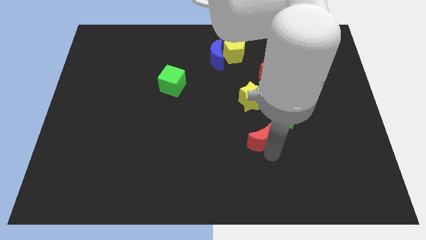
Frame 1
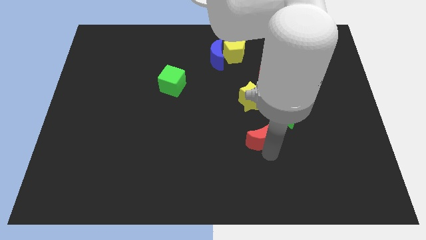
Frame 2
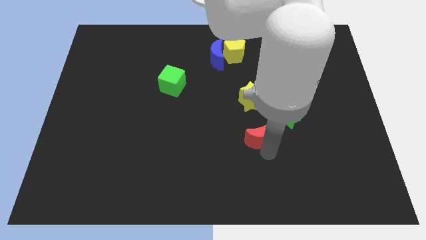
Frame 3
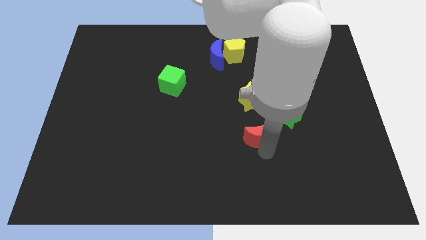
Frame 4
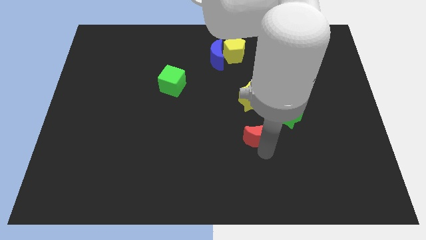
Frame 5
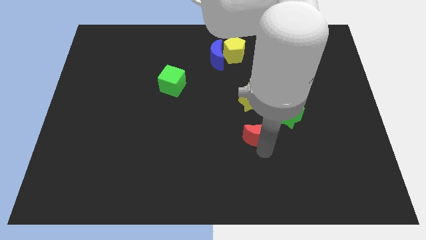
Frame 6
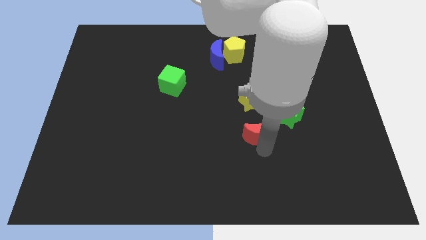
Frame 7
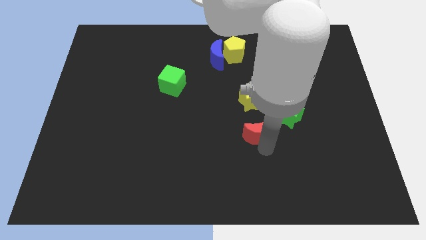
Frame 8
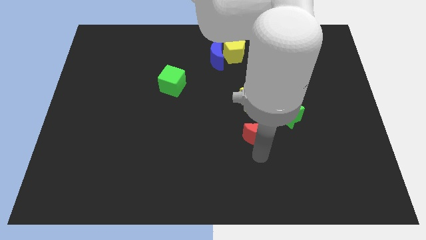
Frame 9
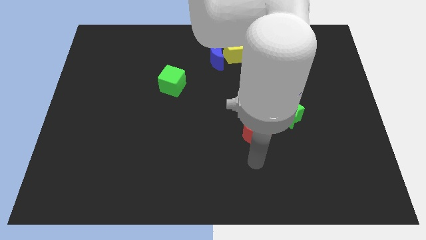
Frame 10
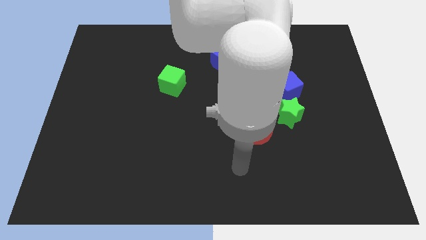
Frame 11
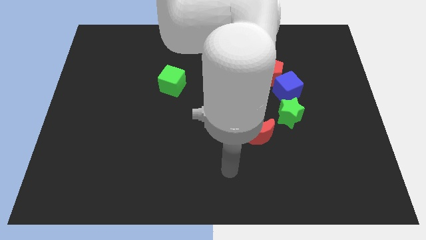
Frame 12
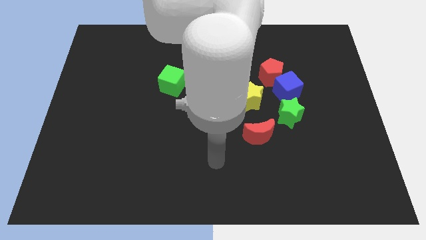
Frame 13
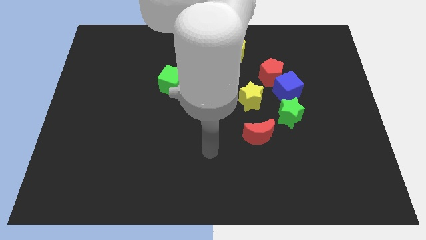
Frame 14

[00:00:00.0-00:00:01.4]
place the red moon below the yellow star

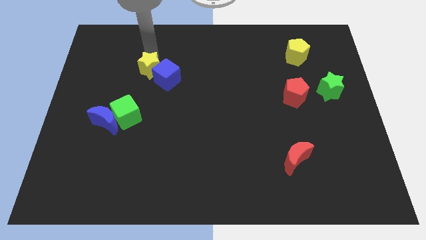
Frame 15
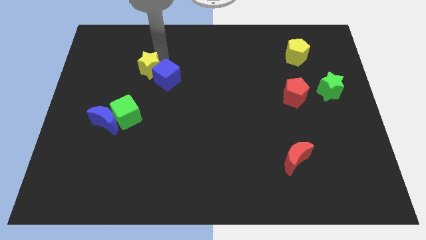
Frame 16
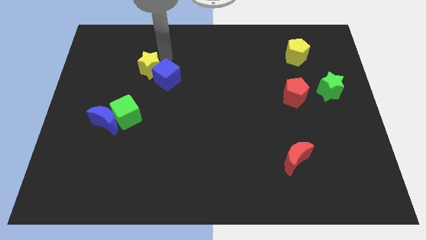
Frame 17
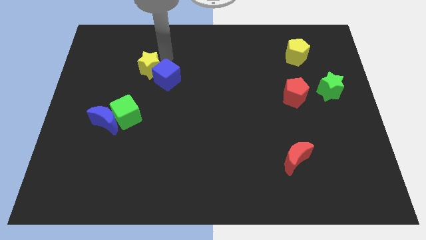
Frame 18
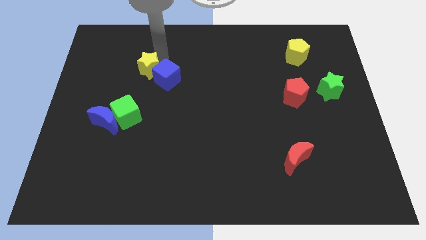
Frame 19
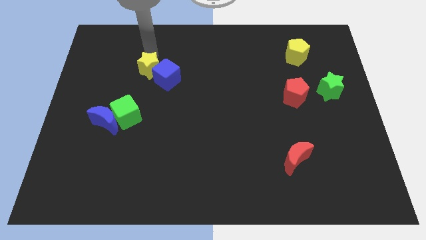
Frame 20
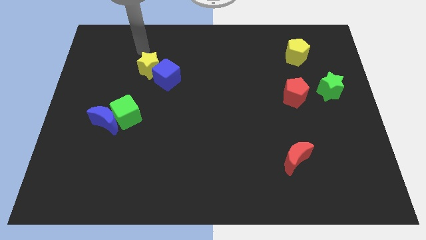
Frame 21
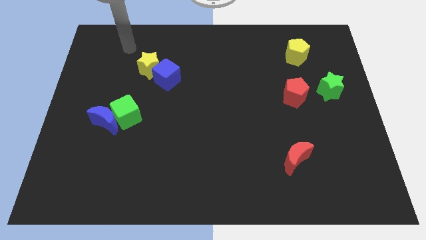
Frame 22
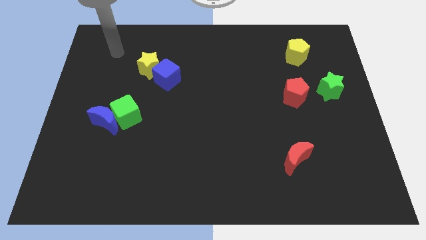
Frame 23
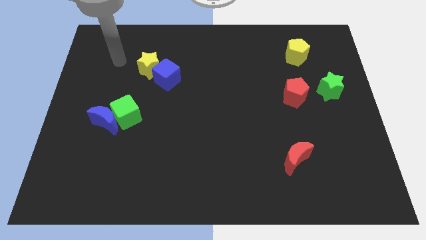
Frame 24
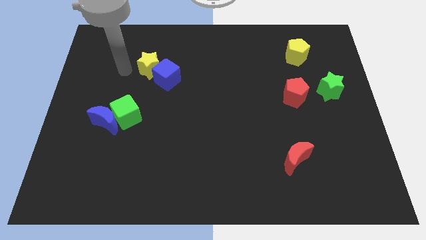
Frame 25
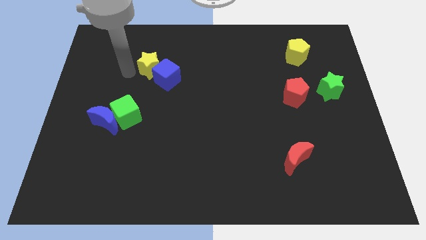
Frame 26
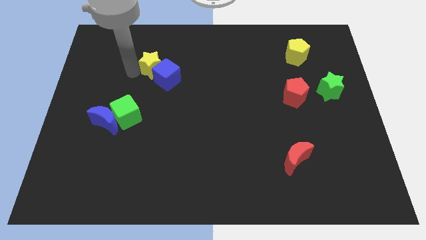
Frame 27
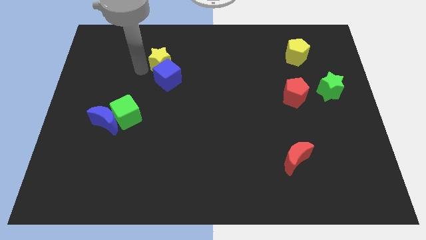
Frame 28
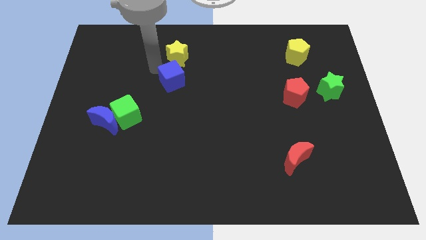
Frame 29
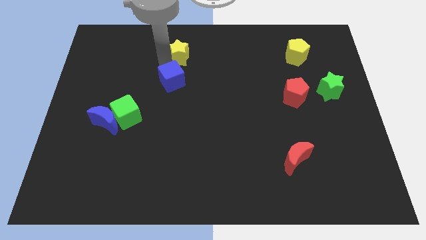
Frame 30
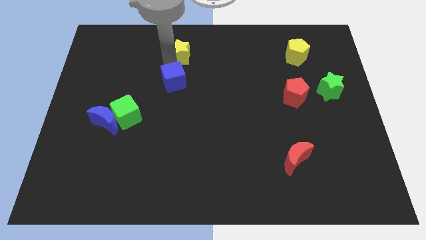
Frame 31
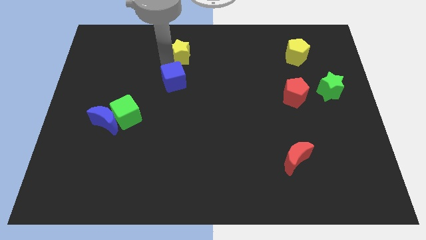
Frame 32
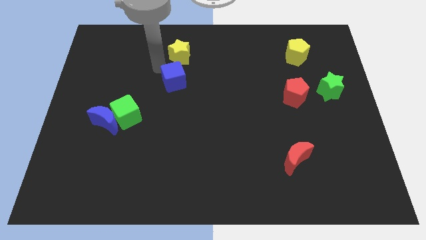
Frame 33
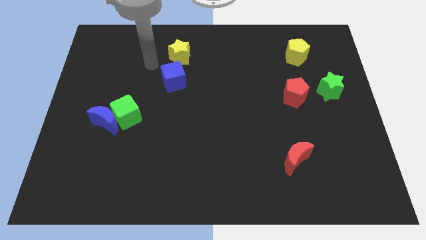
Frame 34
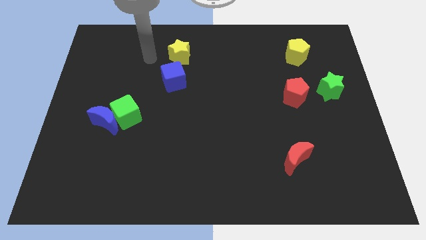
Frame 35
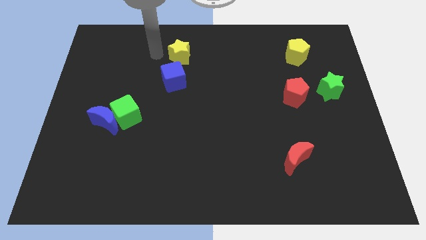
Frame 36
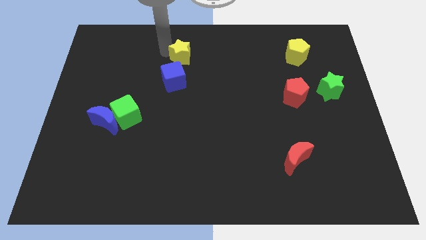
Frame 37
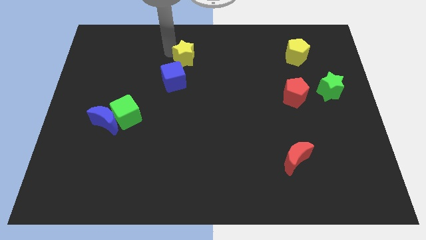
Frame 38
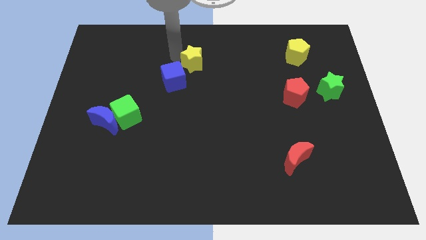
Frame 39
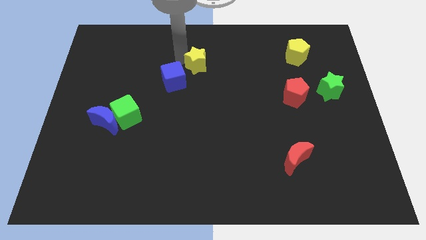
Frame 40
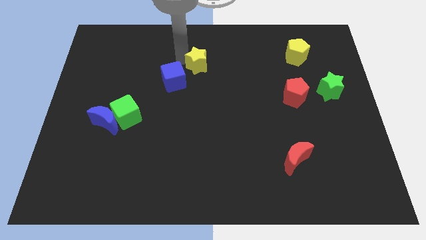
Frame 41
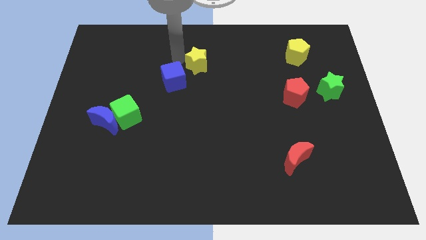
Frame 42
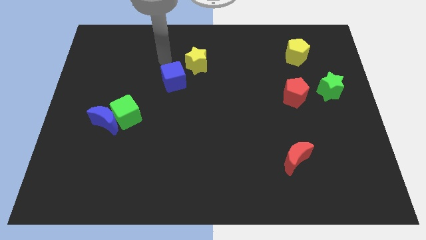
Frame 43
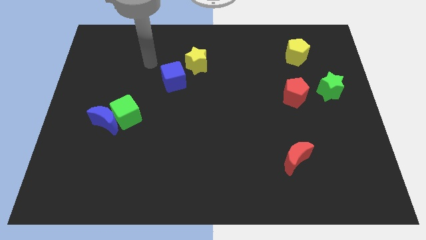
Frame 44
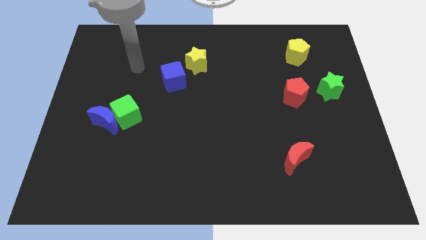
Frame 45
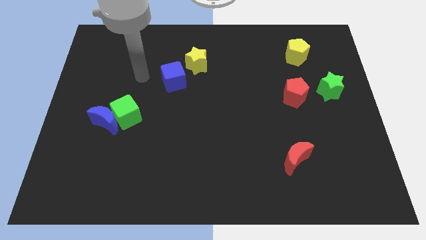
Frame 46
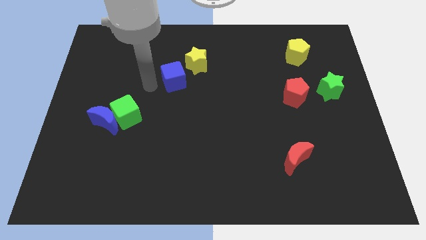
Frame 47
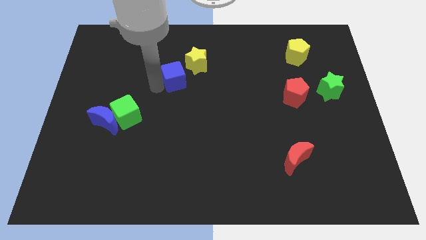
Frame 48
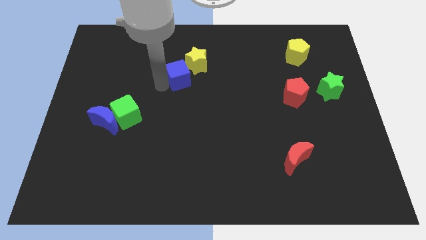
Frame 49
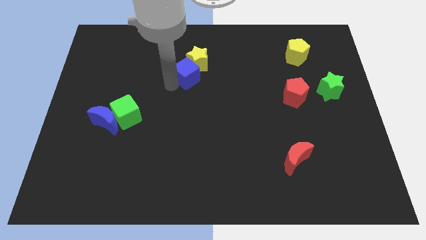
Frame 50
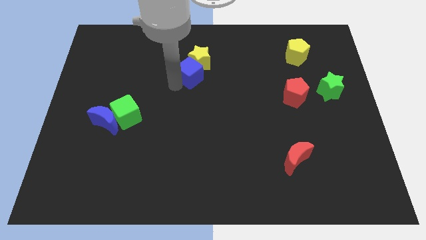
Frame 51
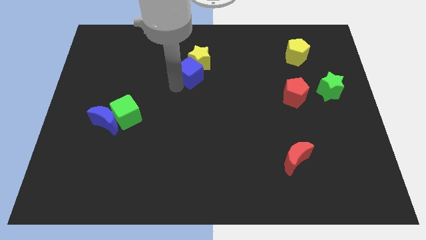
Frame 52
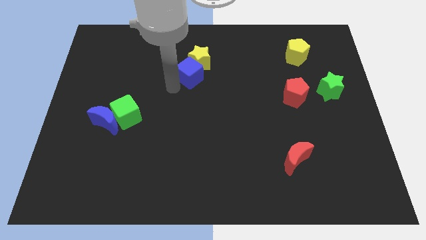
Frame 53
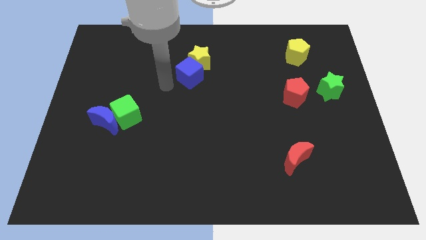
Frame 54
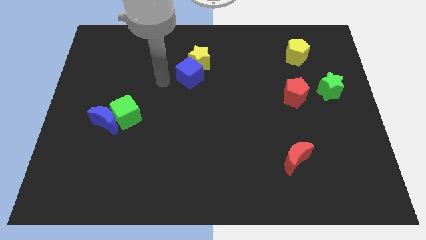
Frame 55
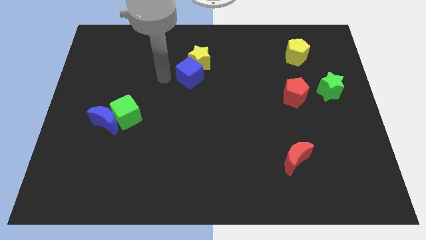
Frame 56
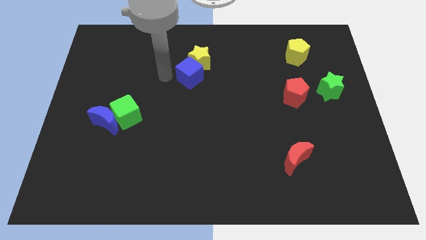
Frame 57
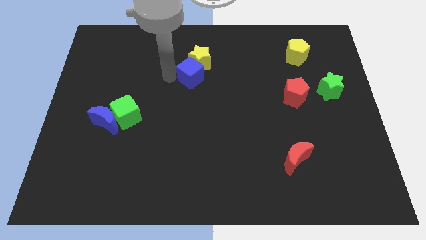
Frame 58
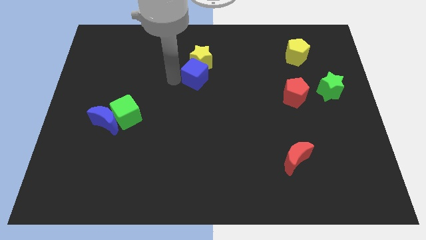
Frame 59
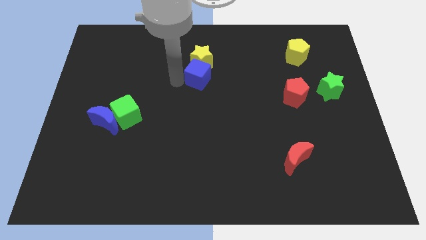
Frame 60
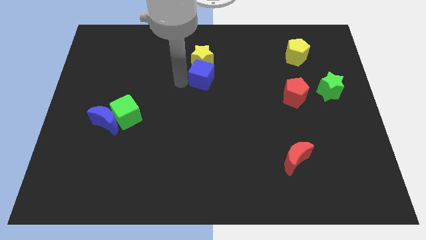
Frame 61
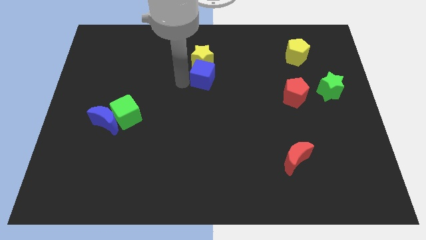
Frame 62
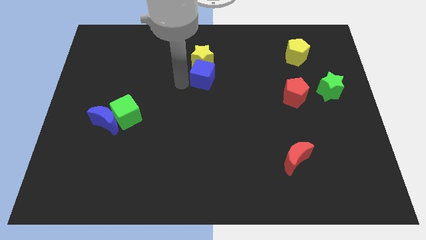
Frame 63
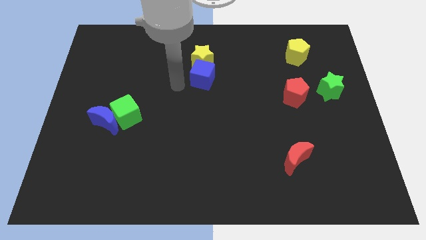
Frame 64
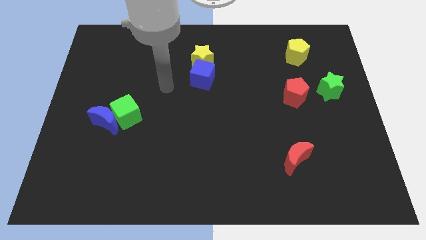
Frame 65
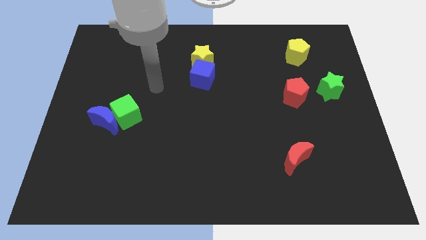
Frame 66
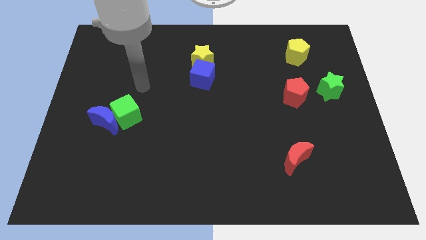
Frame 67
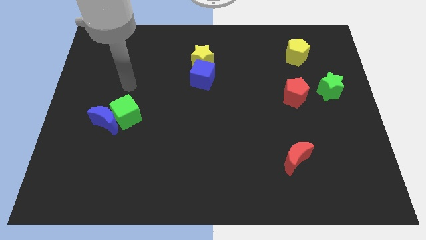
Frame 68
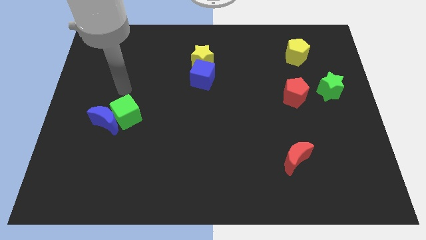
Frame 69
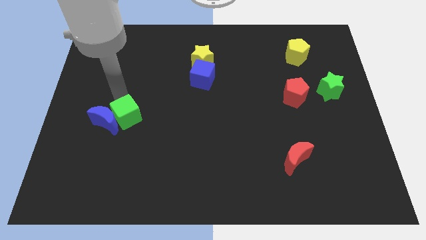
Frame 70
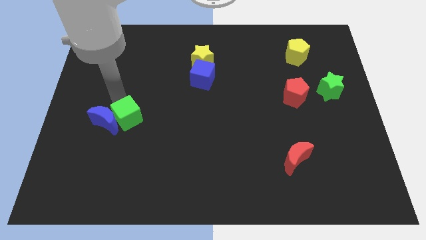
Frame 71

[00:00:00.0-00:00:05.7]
push the yellow star and blue cube to the center

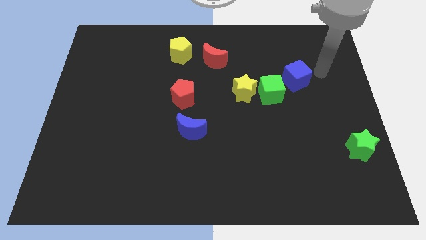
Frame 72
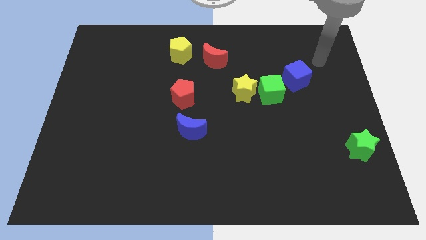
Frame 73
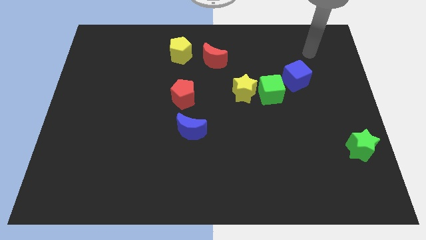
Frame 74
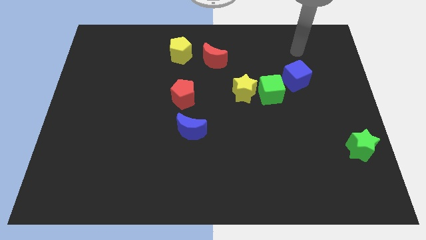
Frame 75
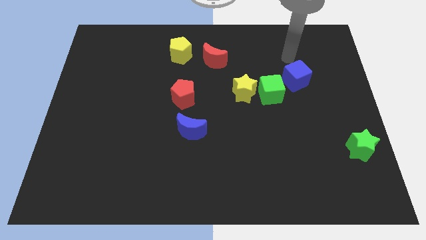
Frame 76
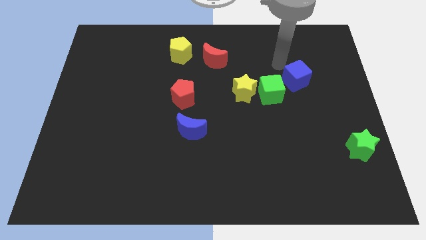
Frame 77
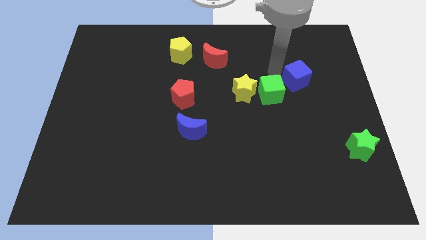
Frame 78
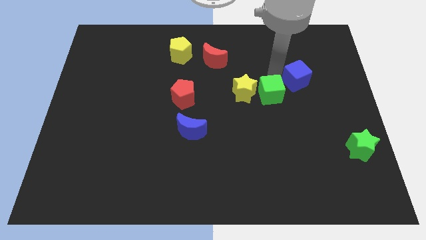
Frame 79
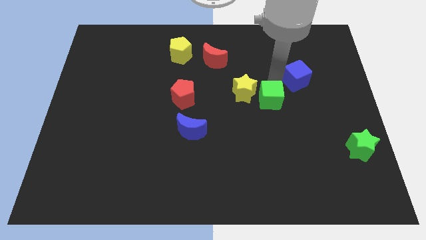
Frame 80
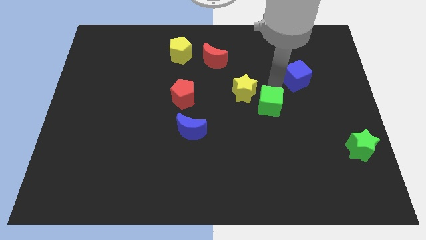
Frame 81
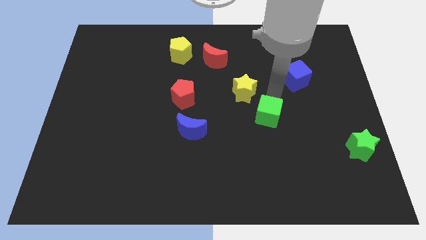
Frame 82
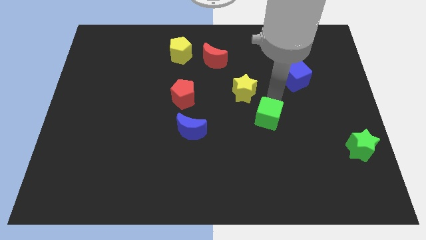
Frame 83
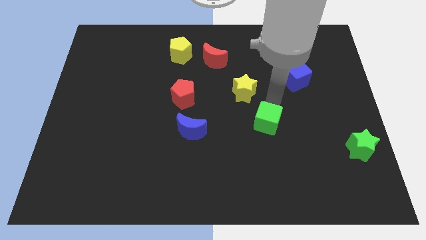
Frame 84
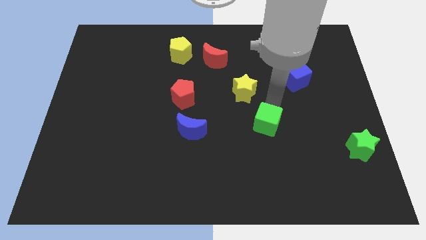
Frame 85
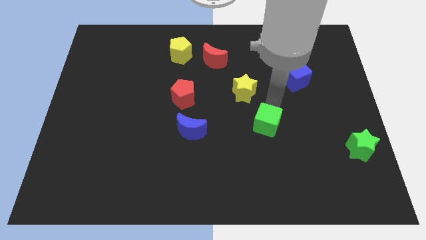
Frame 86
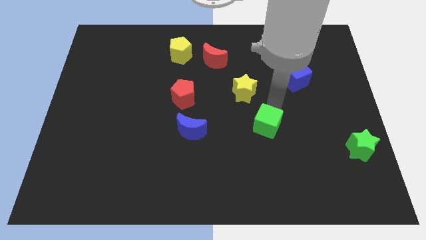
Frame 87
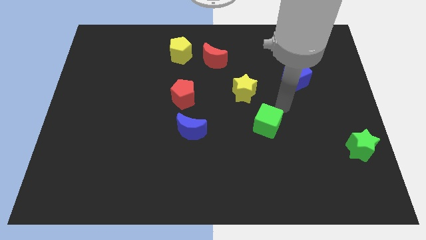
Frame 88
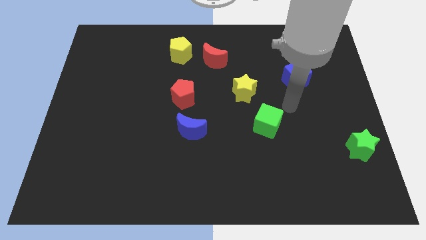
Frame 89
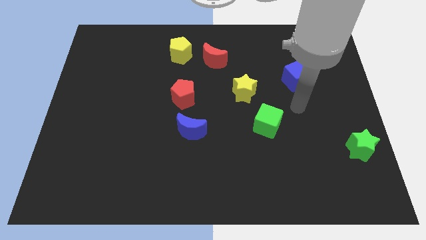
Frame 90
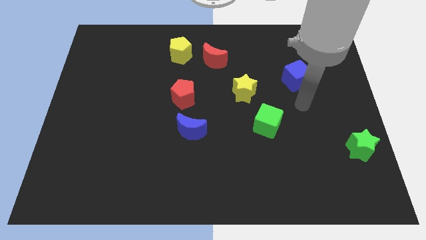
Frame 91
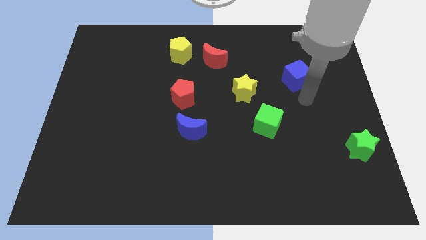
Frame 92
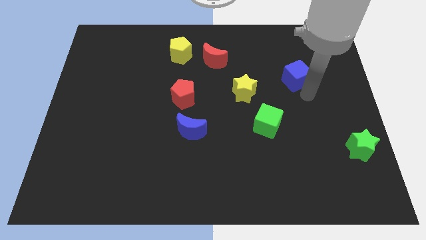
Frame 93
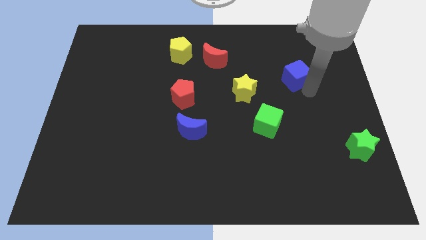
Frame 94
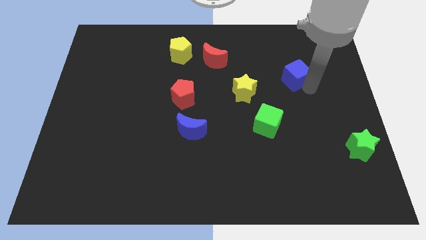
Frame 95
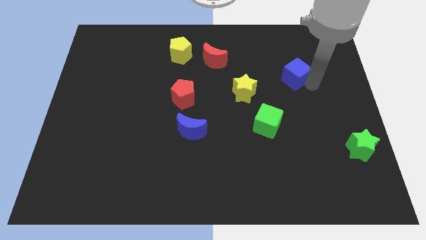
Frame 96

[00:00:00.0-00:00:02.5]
push the green cube to the bottom of the yellow star
